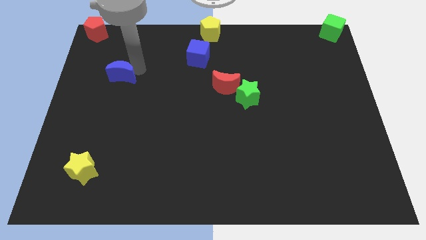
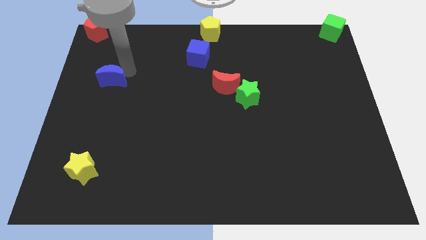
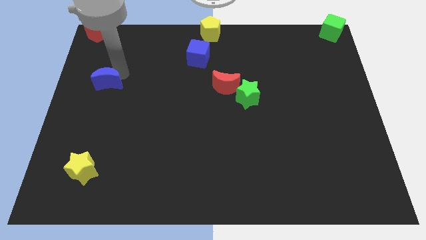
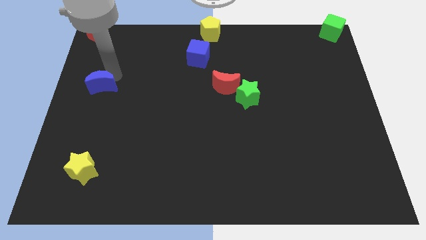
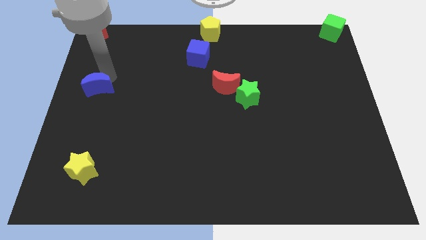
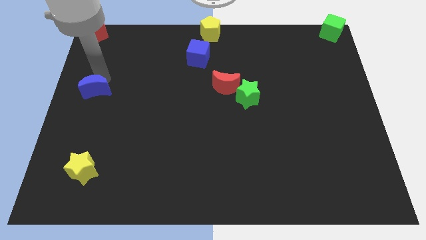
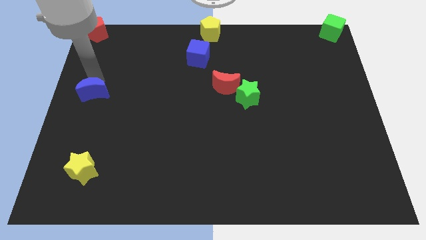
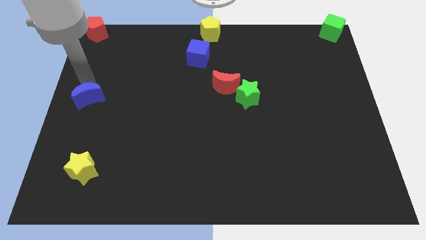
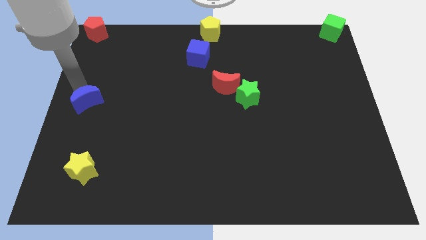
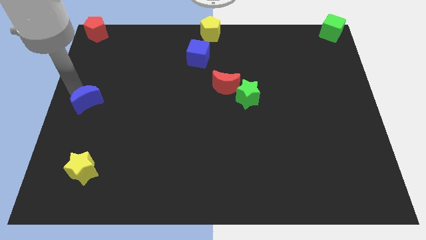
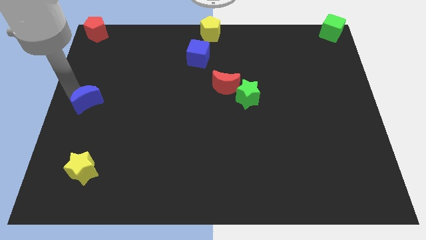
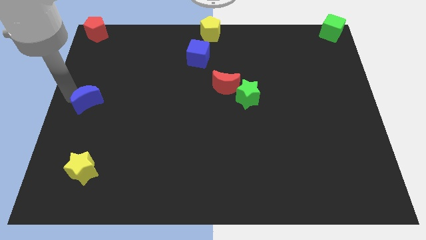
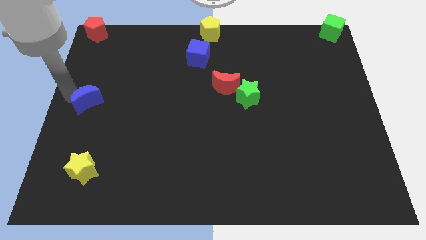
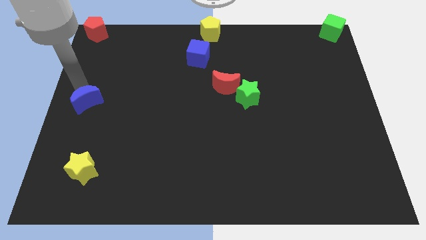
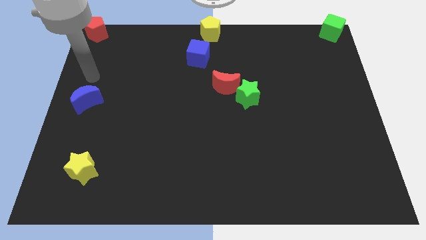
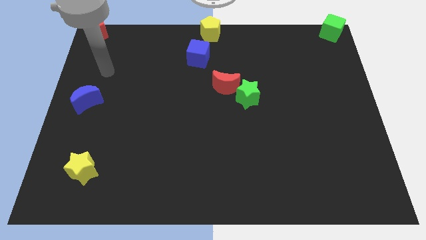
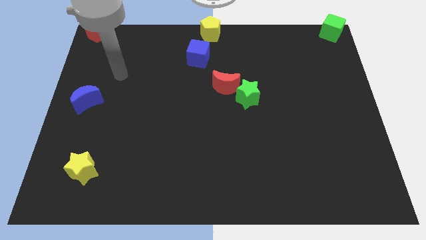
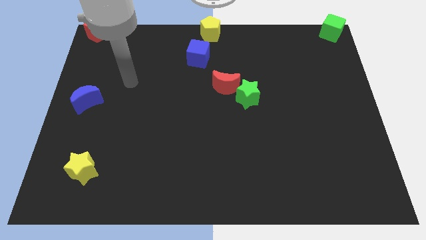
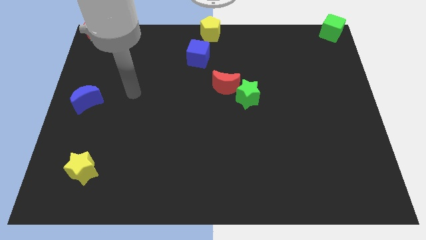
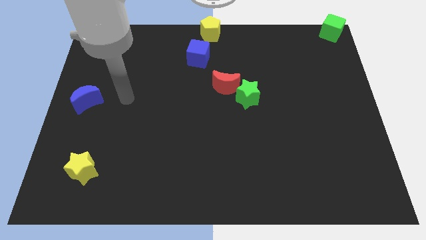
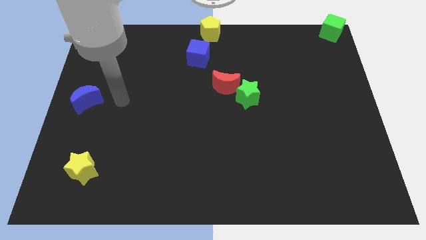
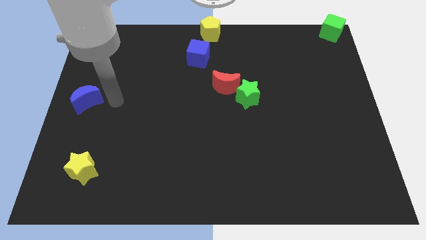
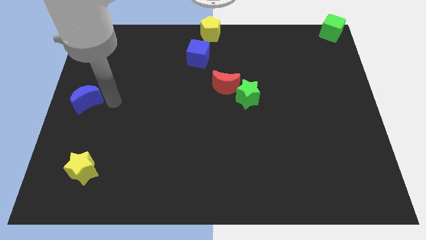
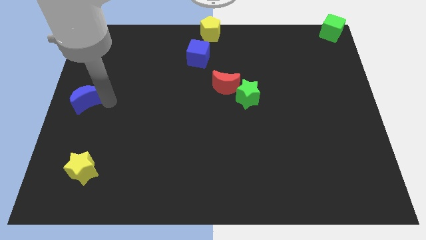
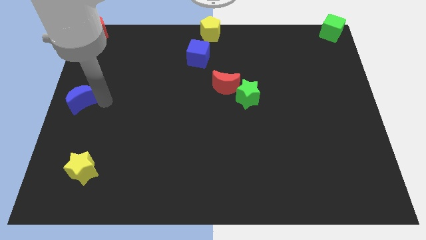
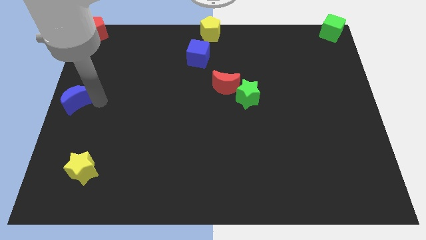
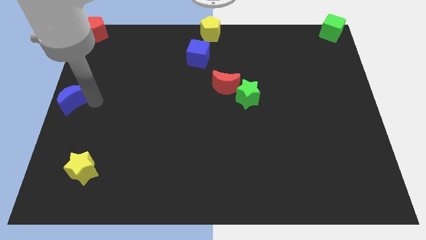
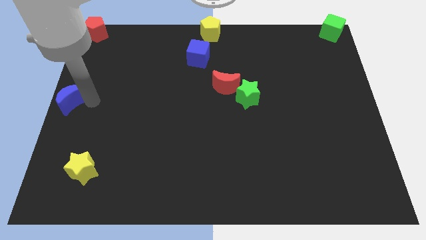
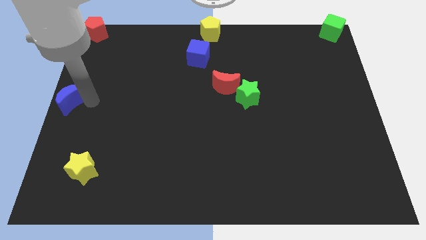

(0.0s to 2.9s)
place the blue moon to the left side of the board

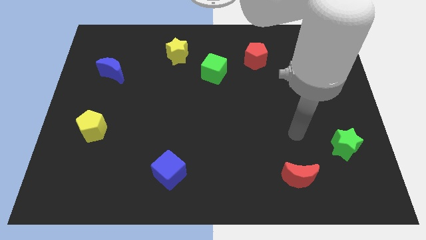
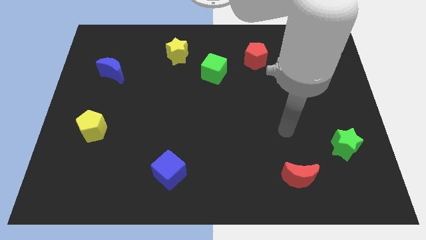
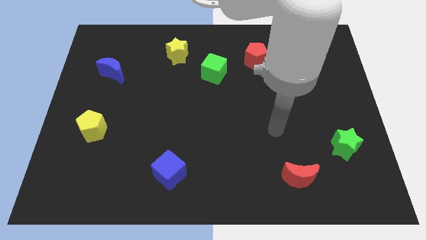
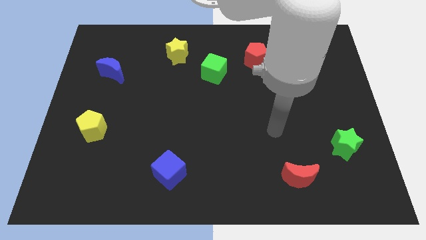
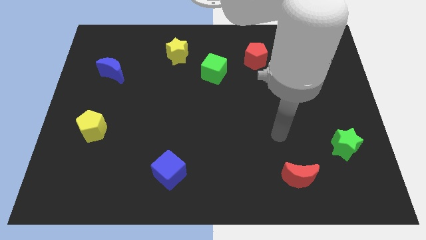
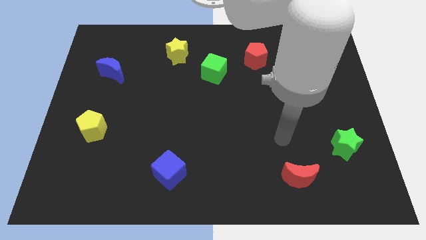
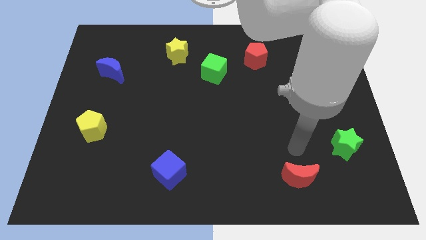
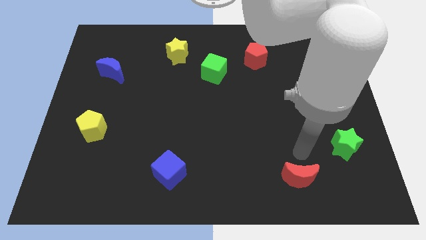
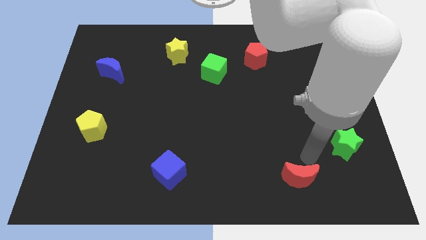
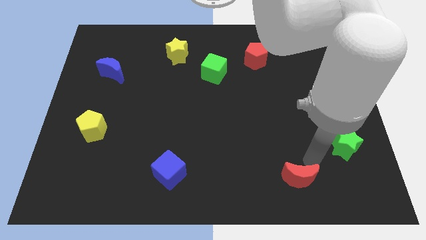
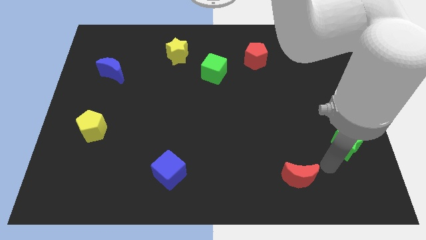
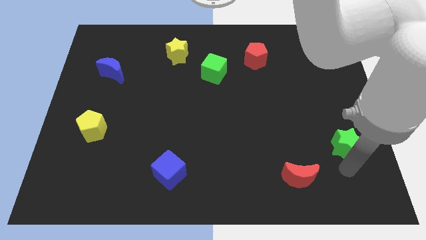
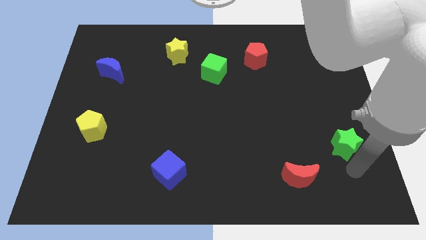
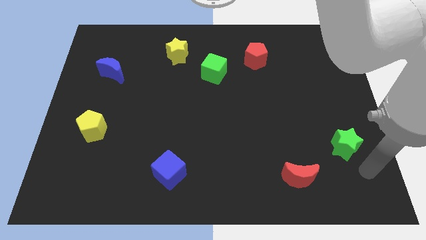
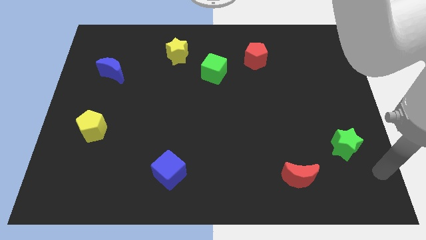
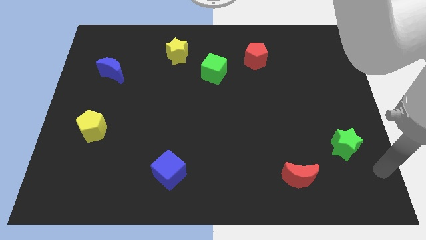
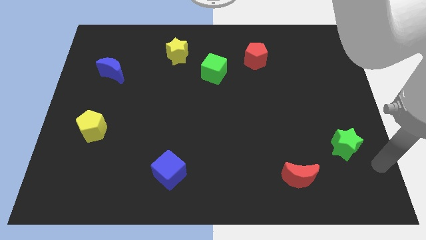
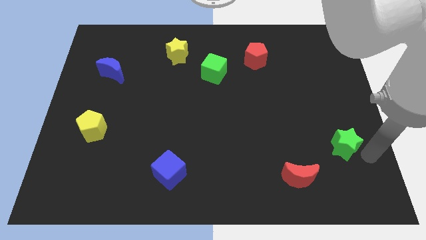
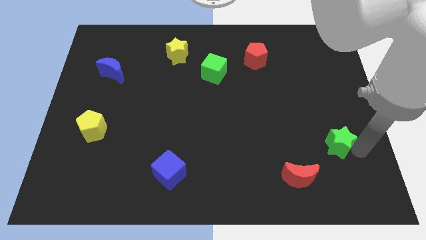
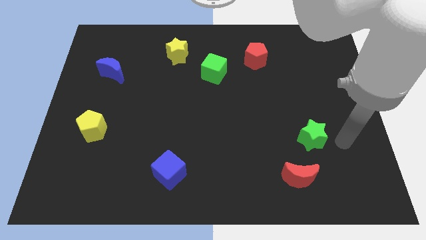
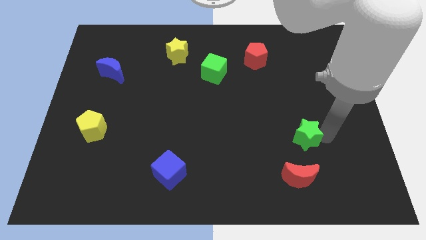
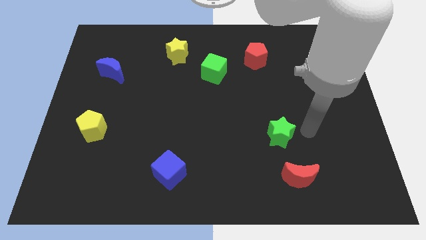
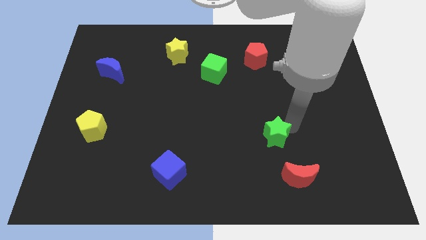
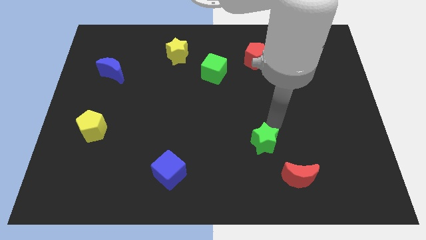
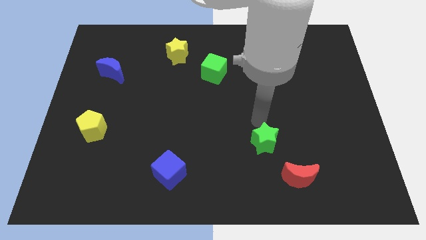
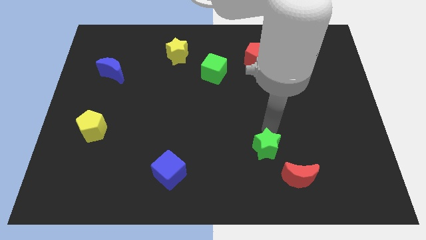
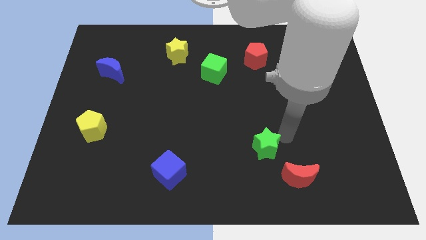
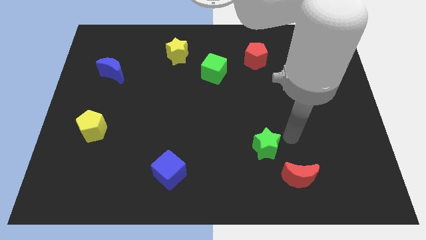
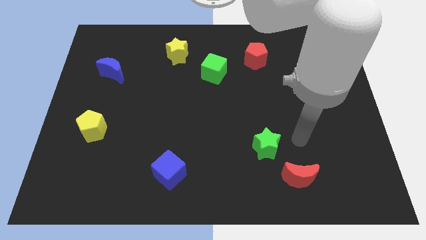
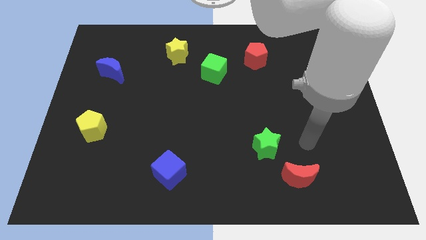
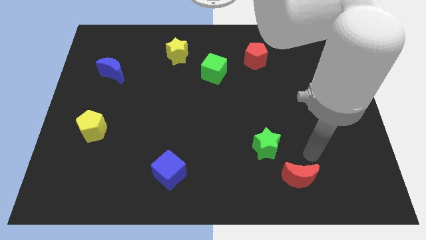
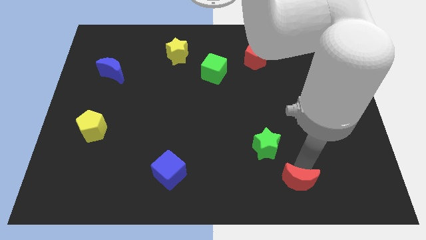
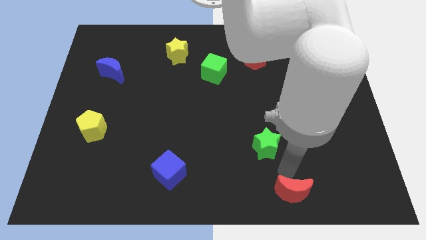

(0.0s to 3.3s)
slide the green star diagonally top left to the red crescent

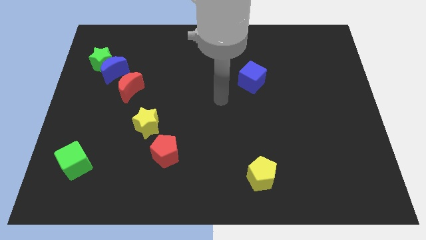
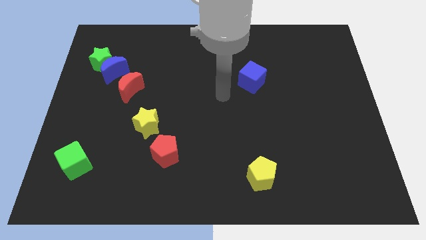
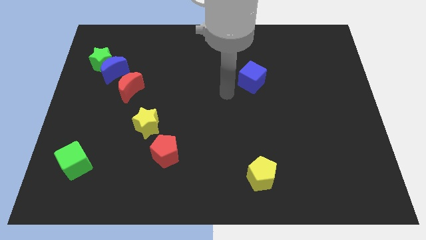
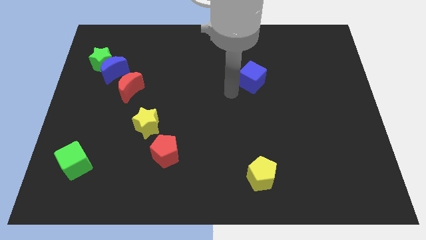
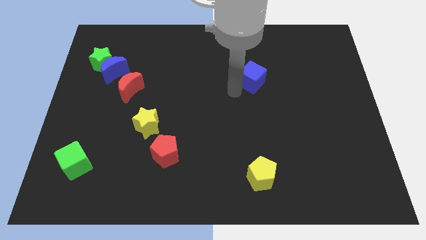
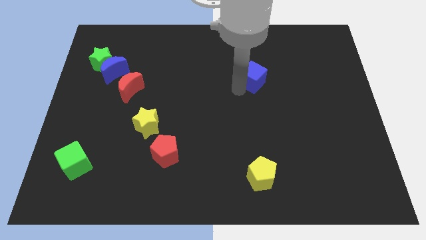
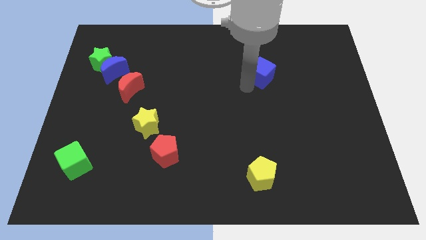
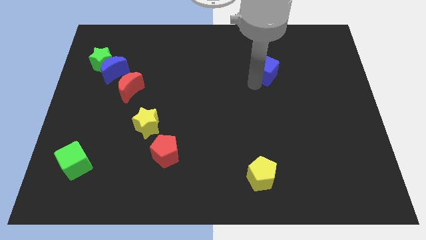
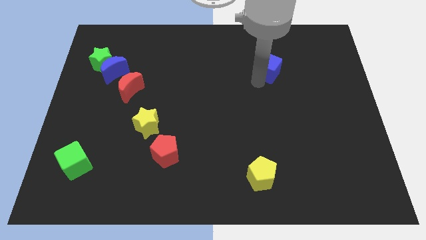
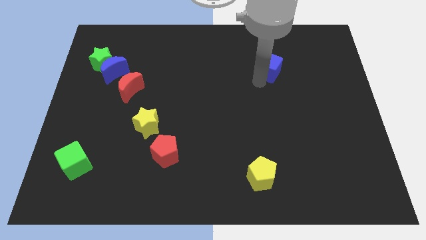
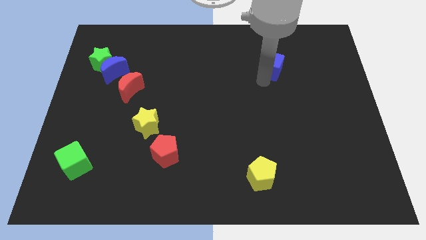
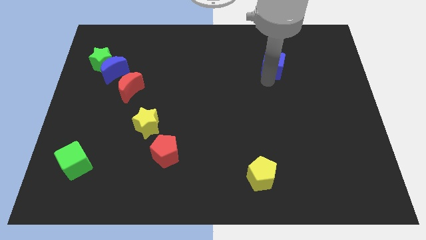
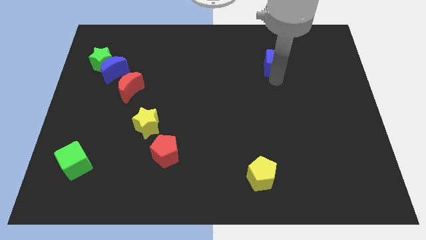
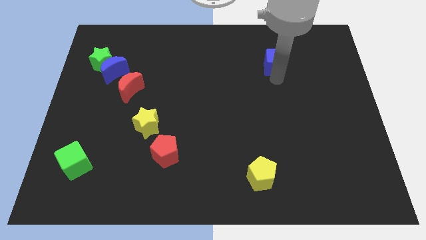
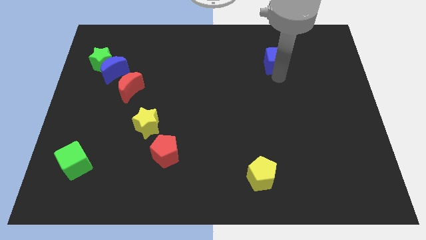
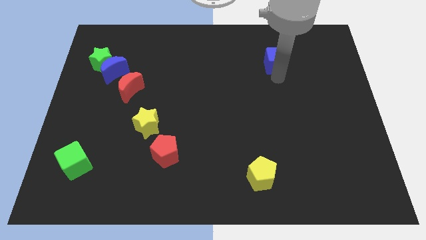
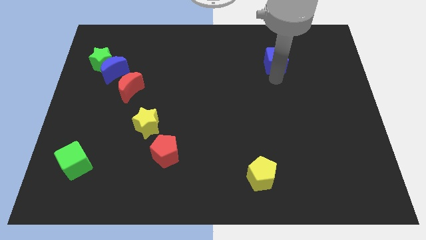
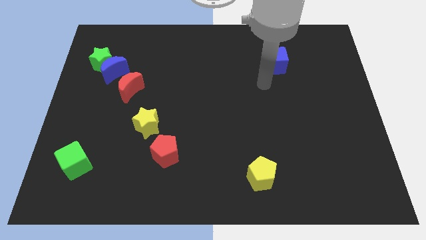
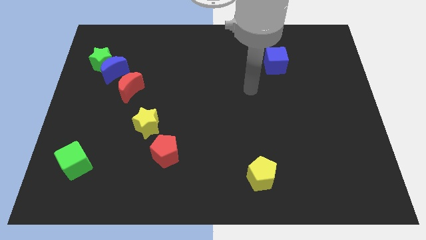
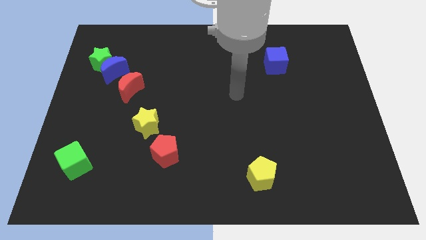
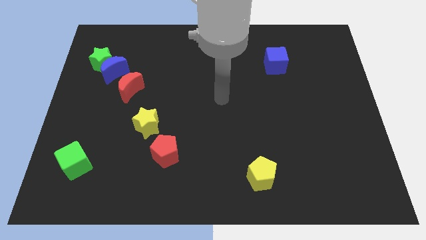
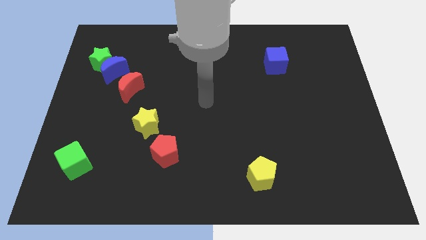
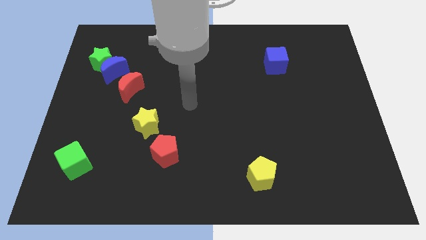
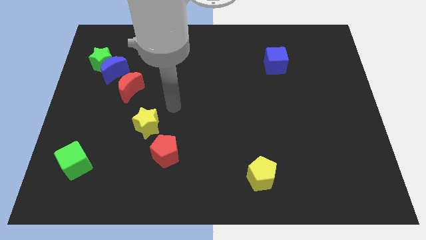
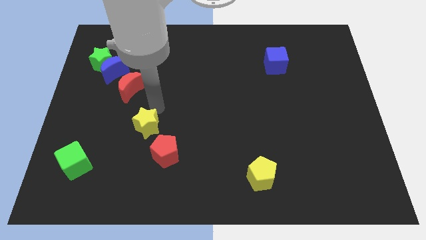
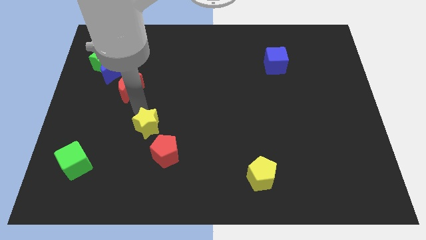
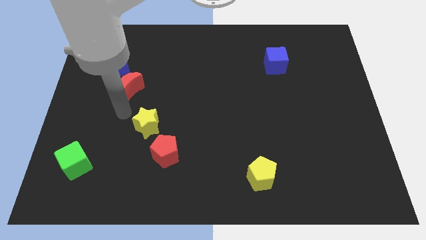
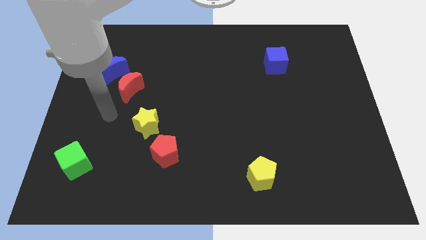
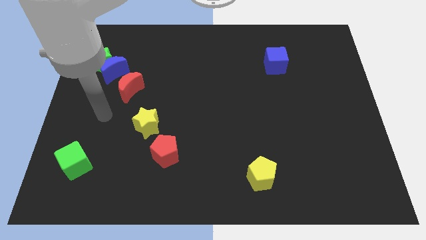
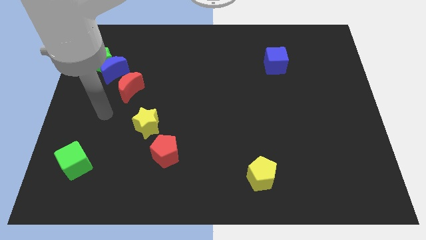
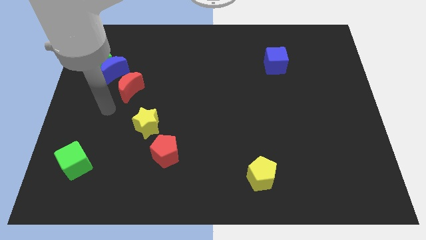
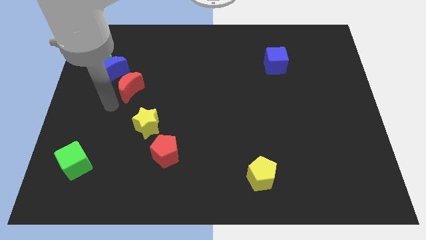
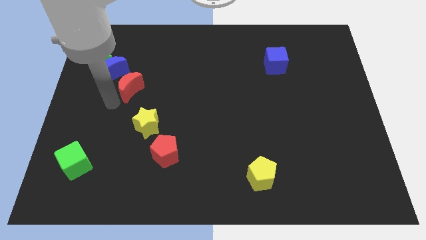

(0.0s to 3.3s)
move the blue cube to the top of the board
